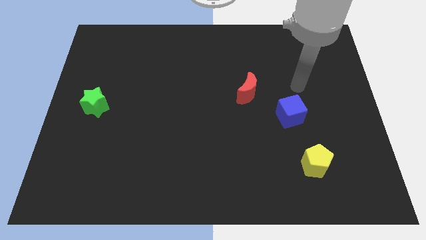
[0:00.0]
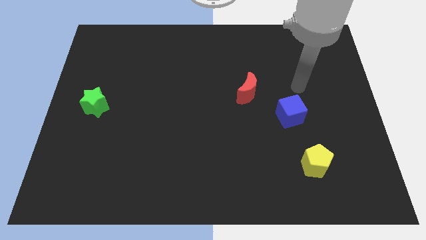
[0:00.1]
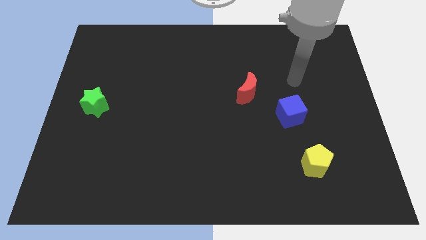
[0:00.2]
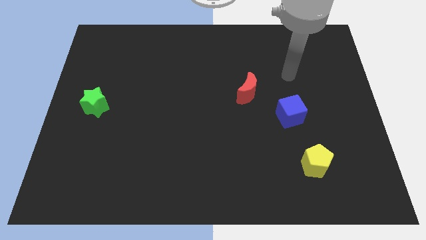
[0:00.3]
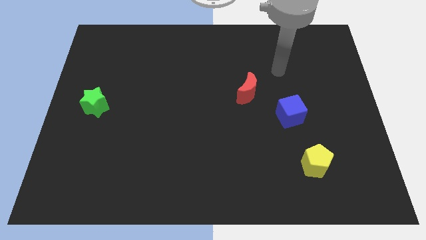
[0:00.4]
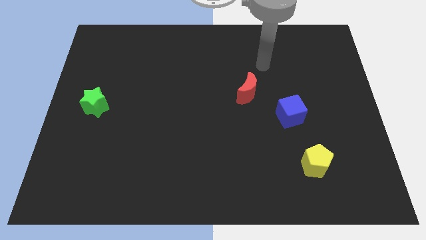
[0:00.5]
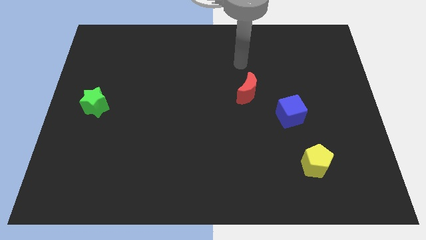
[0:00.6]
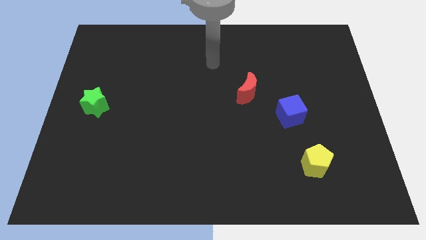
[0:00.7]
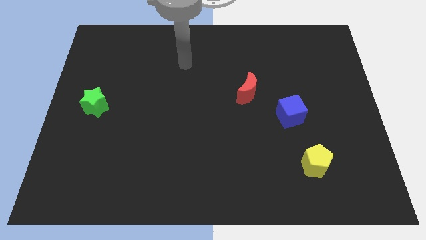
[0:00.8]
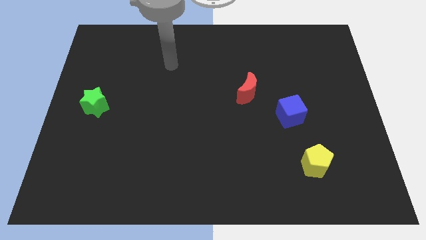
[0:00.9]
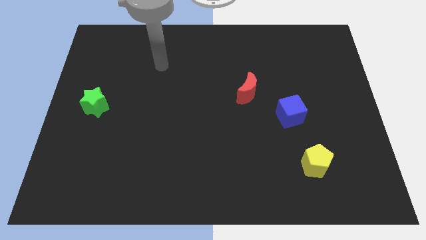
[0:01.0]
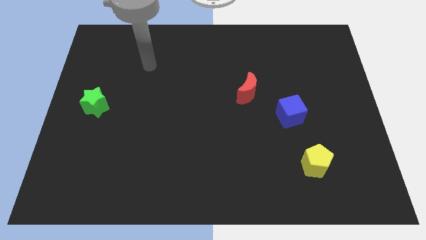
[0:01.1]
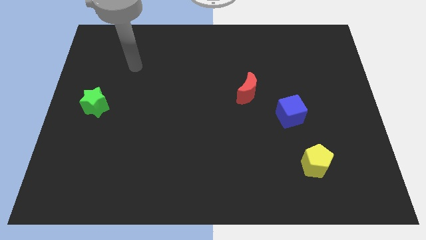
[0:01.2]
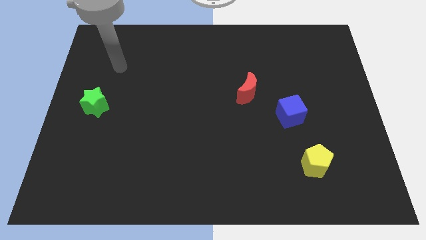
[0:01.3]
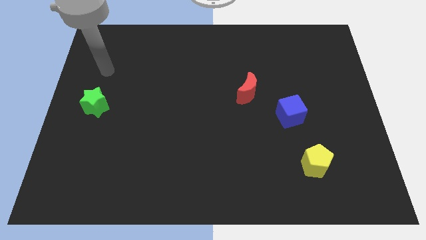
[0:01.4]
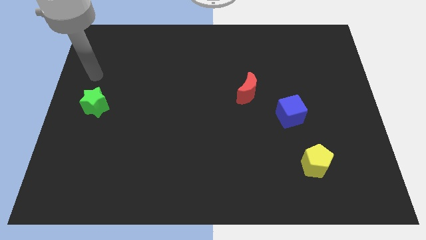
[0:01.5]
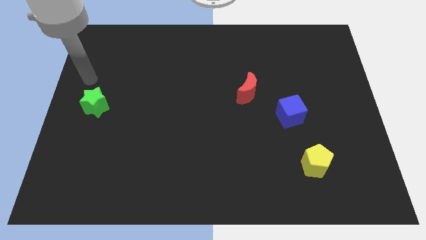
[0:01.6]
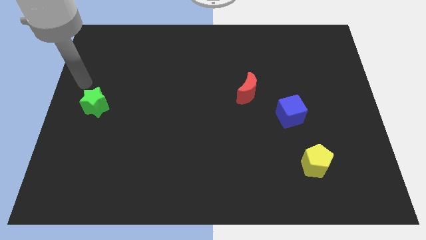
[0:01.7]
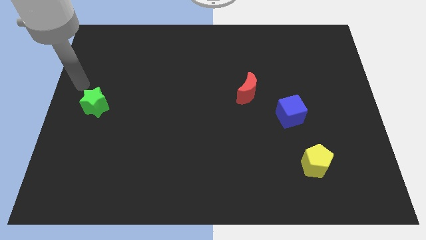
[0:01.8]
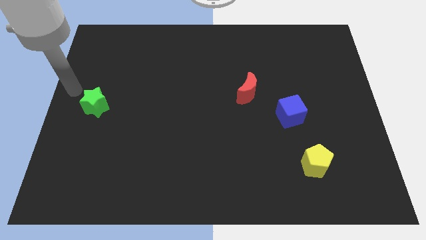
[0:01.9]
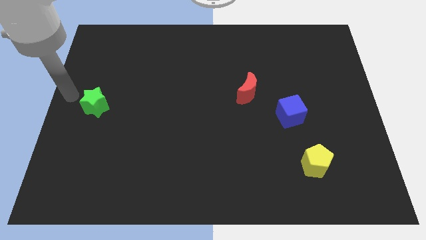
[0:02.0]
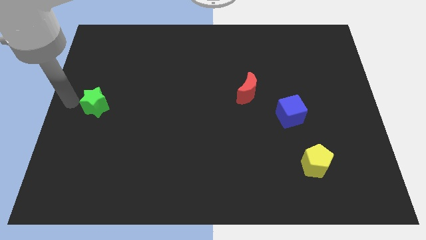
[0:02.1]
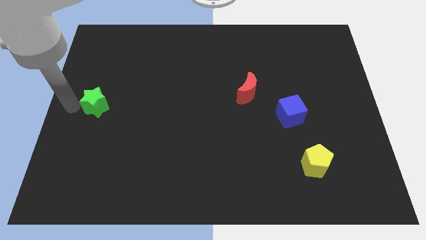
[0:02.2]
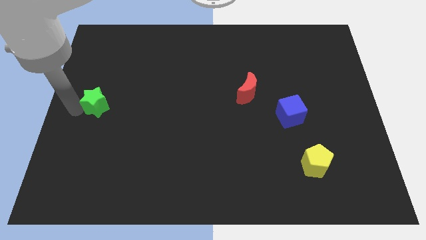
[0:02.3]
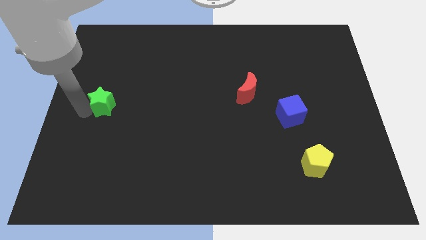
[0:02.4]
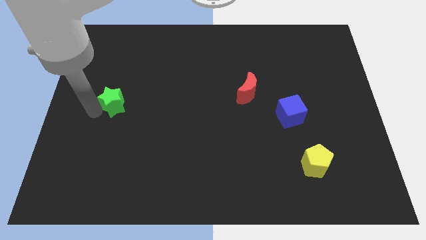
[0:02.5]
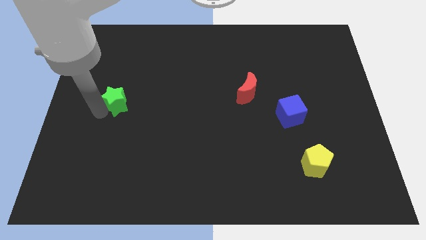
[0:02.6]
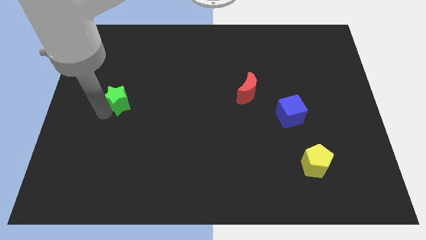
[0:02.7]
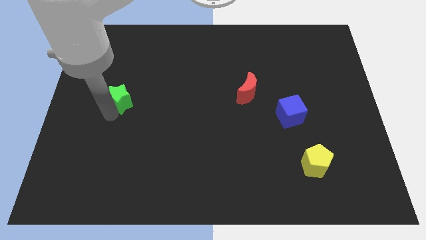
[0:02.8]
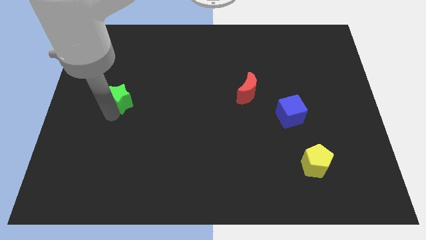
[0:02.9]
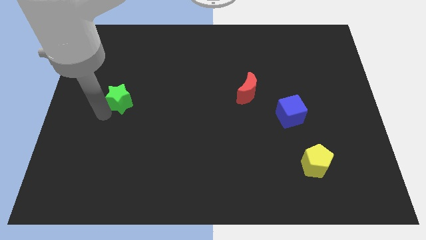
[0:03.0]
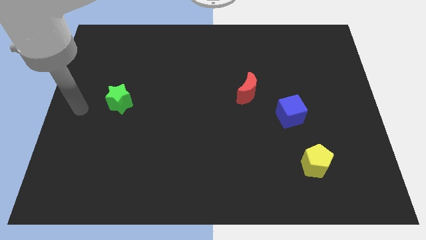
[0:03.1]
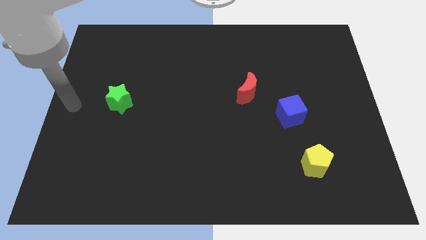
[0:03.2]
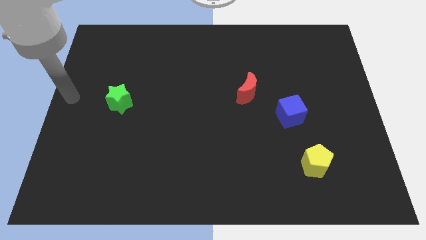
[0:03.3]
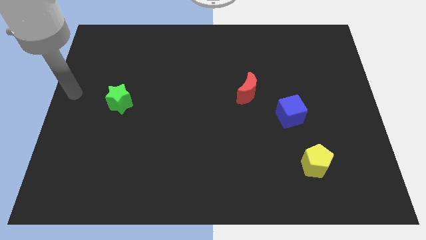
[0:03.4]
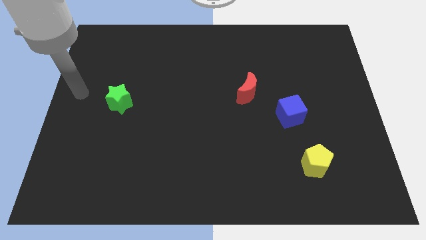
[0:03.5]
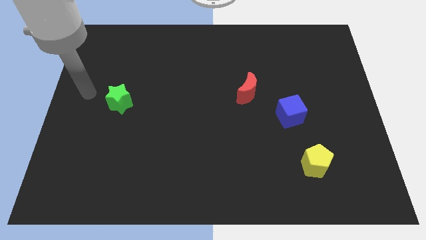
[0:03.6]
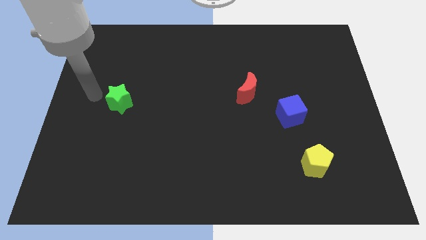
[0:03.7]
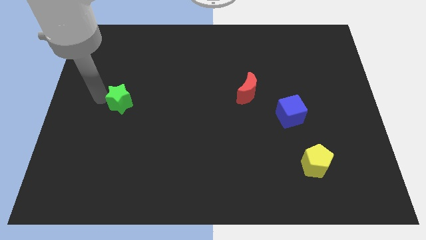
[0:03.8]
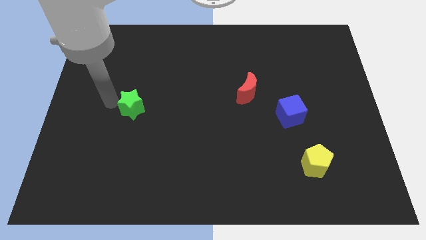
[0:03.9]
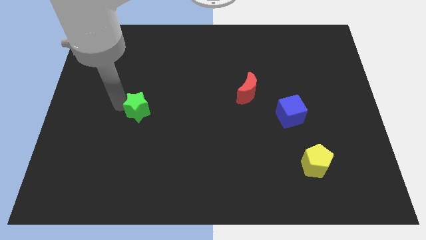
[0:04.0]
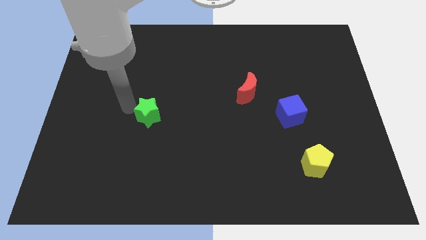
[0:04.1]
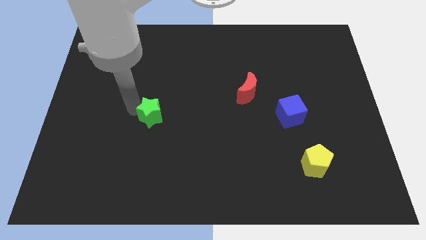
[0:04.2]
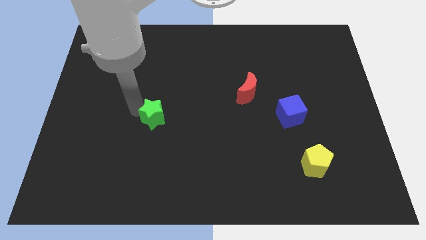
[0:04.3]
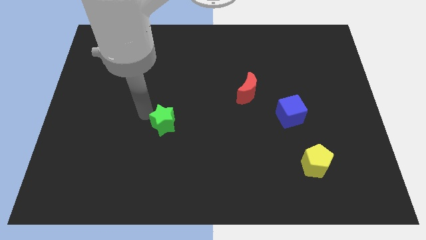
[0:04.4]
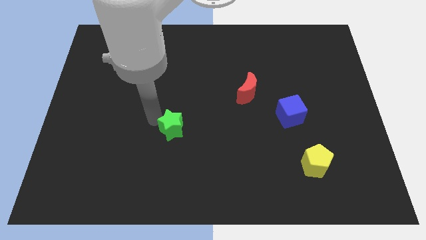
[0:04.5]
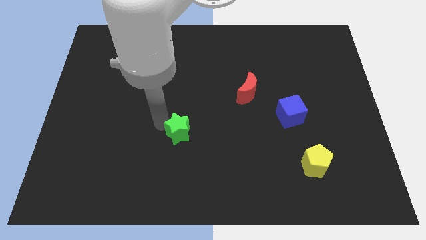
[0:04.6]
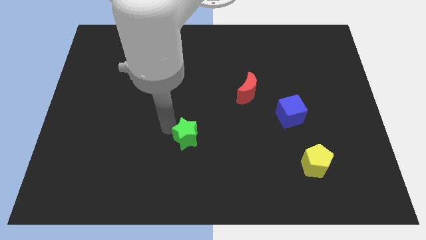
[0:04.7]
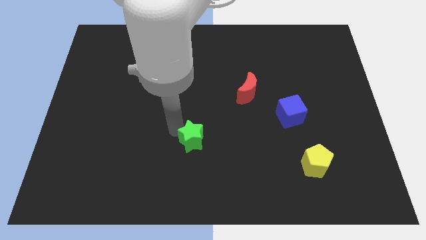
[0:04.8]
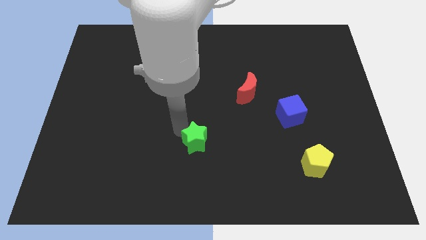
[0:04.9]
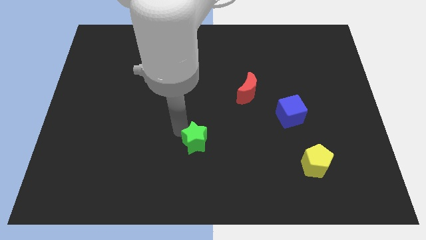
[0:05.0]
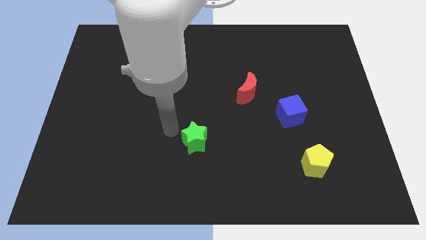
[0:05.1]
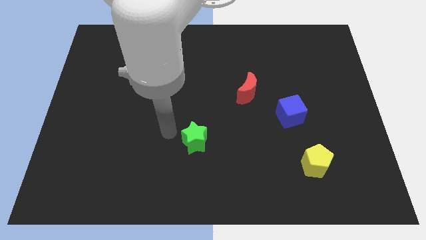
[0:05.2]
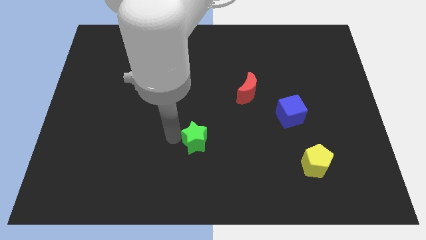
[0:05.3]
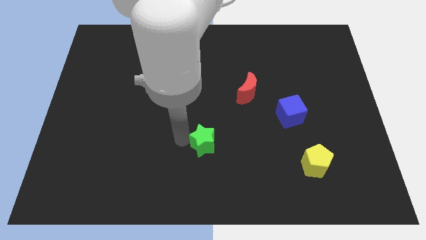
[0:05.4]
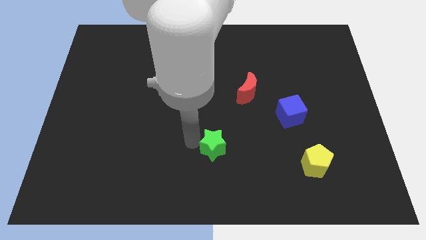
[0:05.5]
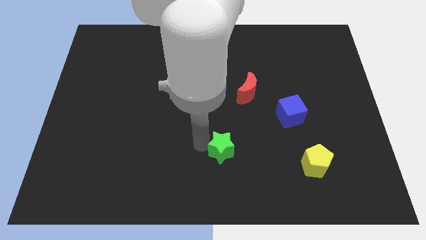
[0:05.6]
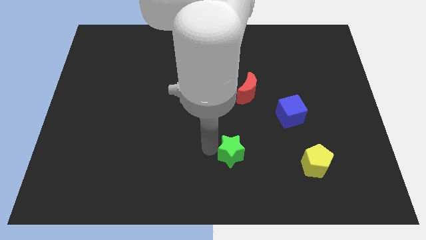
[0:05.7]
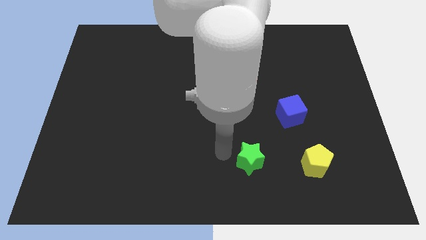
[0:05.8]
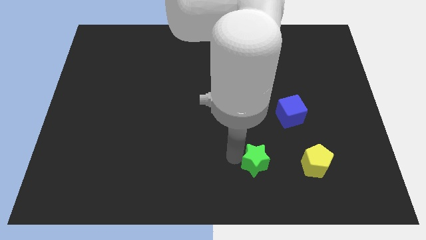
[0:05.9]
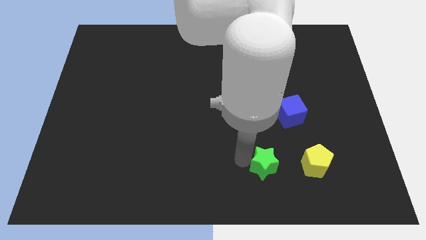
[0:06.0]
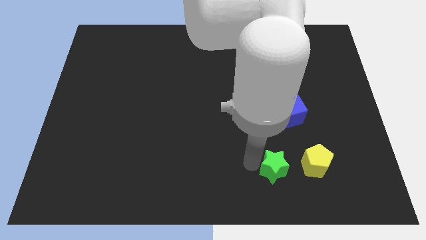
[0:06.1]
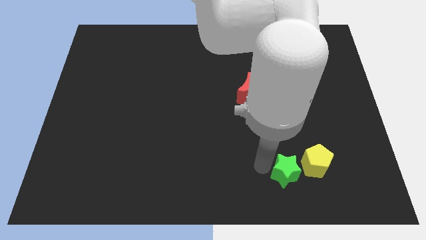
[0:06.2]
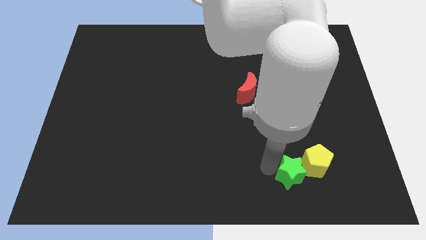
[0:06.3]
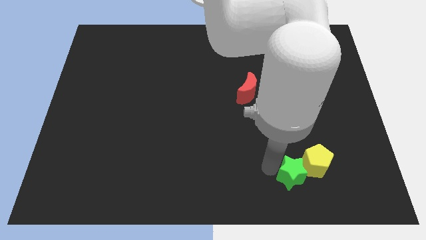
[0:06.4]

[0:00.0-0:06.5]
put the star close to the pentagon

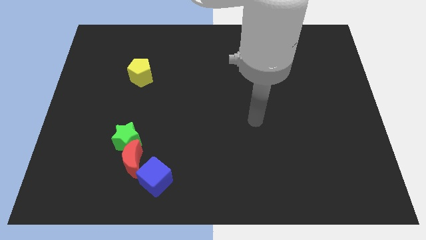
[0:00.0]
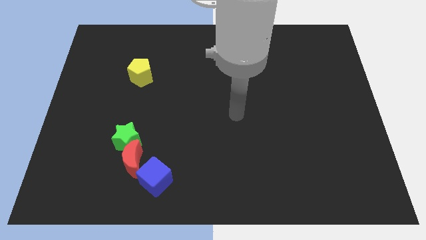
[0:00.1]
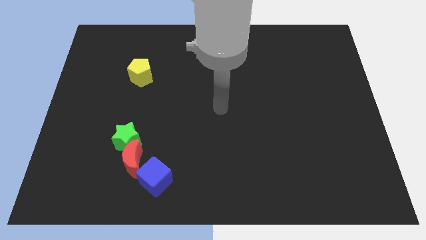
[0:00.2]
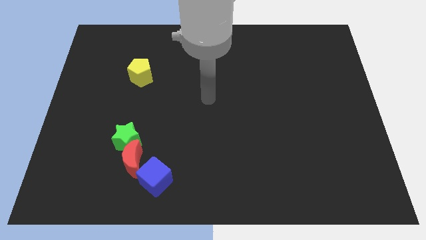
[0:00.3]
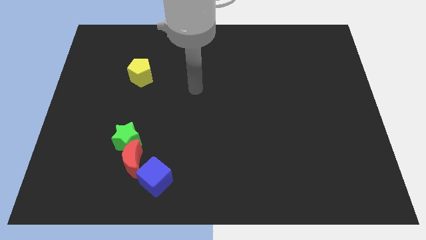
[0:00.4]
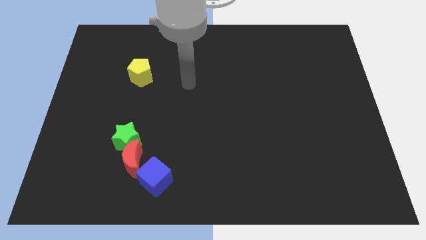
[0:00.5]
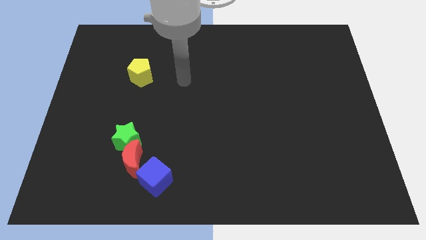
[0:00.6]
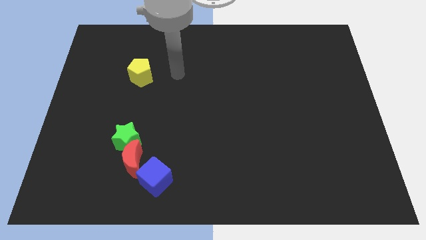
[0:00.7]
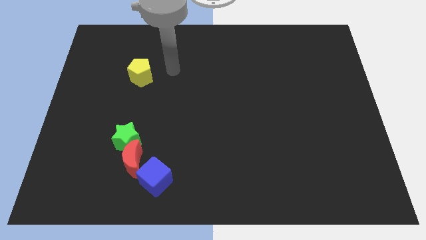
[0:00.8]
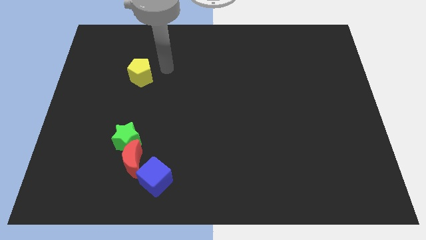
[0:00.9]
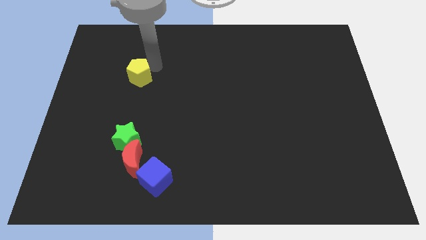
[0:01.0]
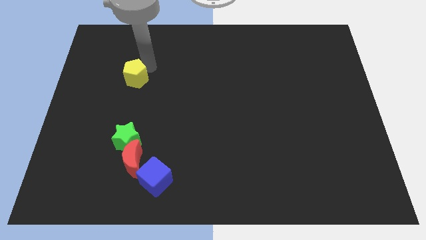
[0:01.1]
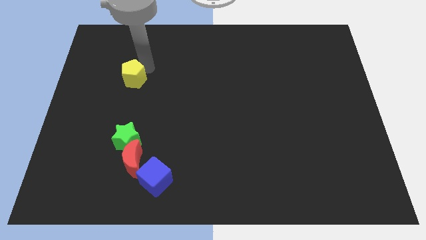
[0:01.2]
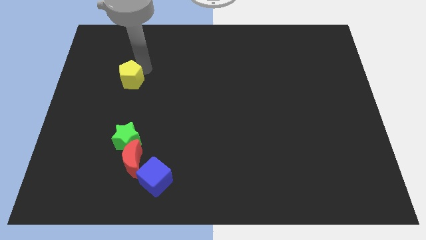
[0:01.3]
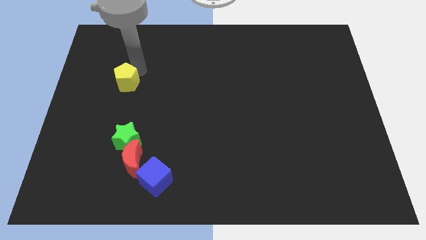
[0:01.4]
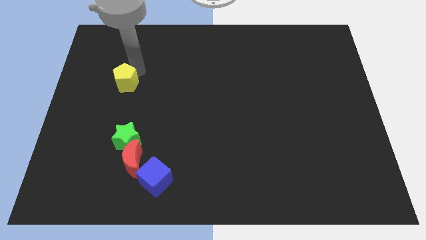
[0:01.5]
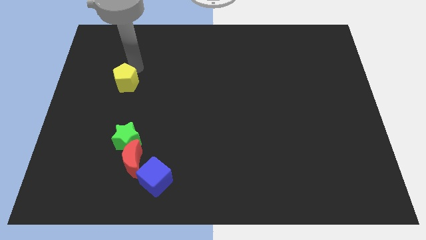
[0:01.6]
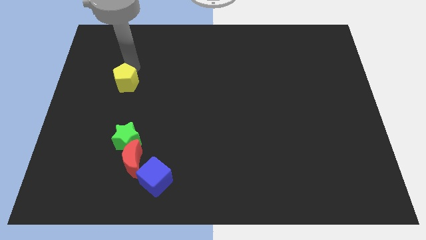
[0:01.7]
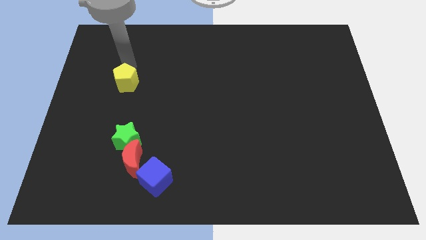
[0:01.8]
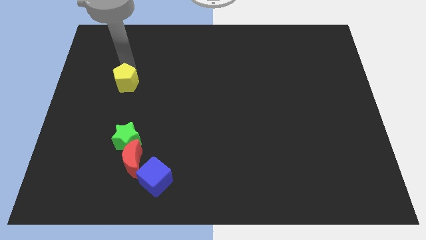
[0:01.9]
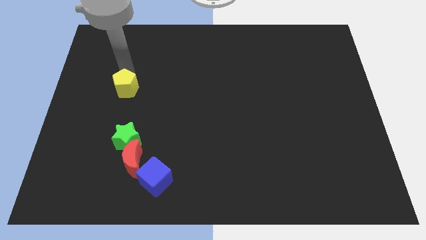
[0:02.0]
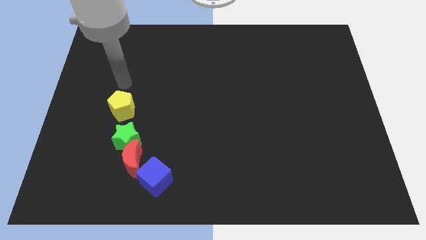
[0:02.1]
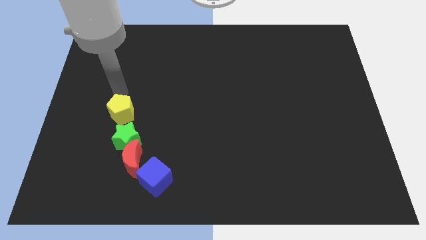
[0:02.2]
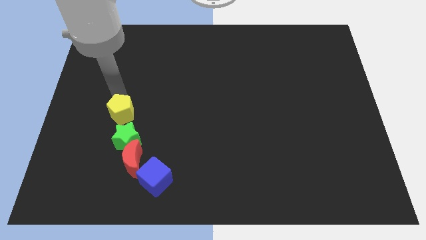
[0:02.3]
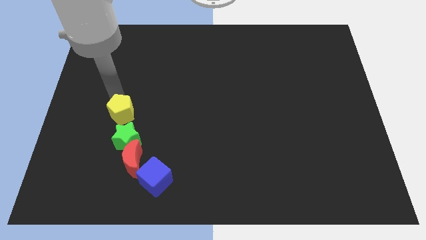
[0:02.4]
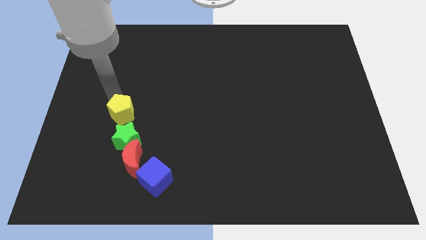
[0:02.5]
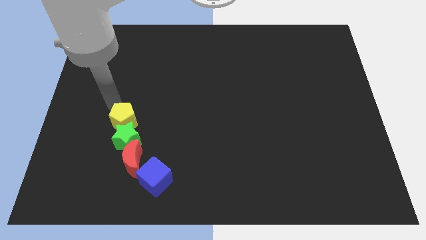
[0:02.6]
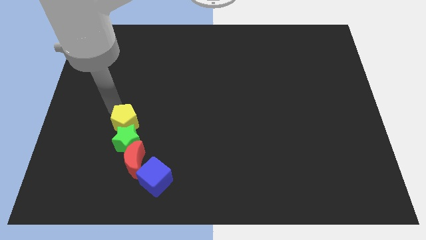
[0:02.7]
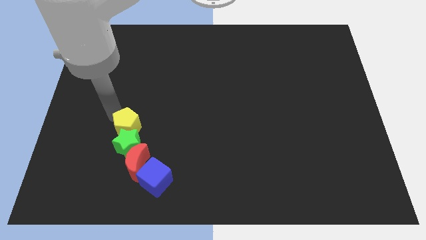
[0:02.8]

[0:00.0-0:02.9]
move the pentagon towards the star
